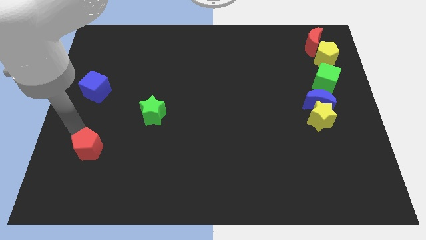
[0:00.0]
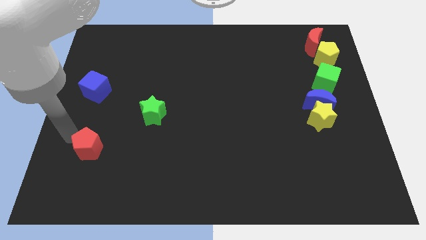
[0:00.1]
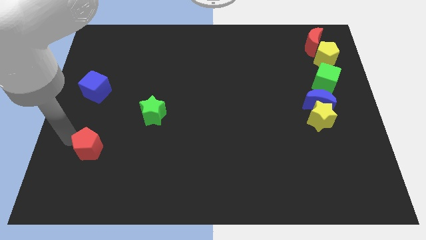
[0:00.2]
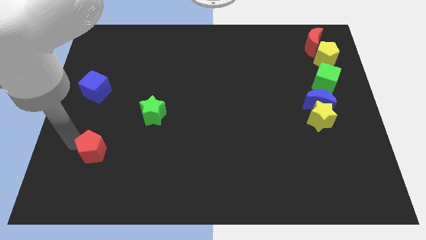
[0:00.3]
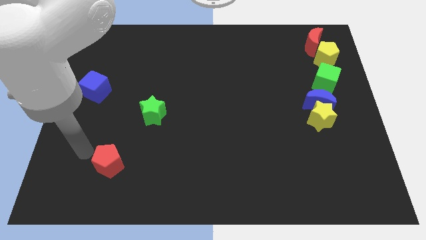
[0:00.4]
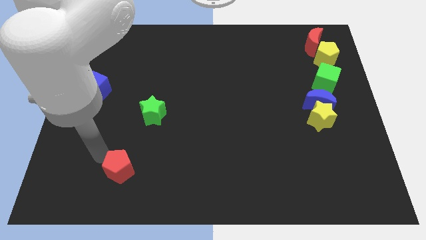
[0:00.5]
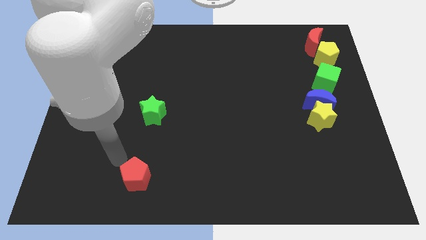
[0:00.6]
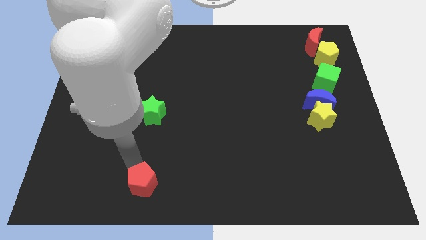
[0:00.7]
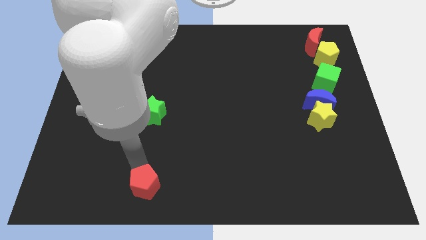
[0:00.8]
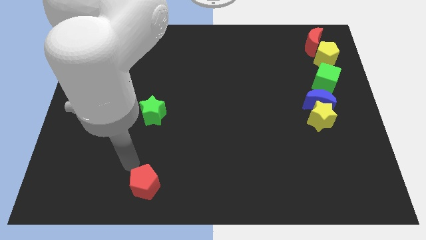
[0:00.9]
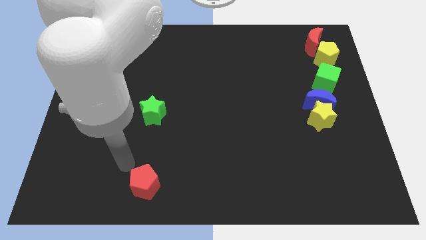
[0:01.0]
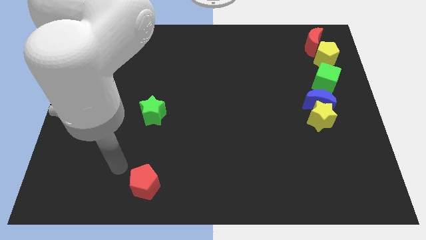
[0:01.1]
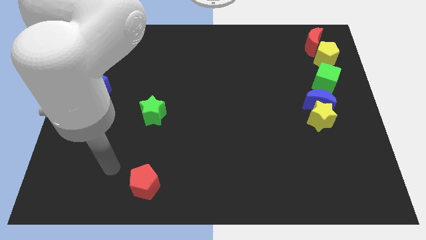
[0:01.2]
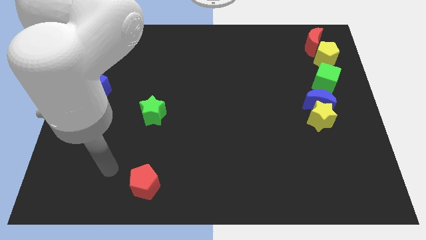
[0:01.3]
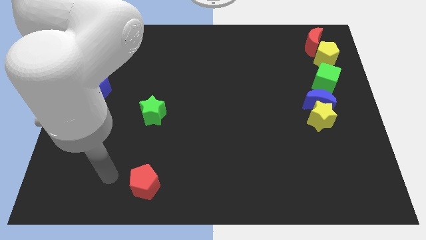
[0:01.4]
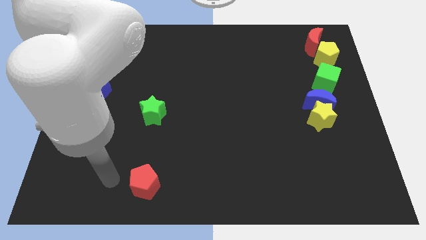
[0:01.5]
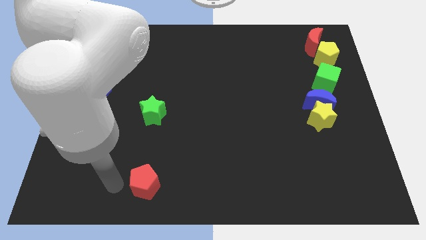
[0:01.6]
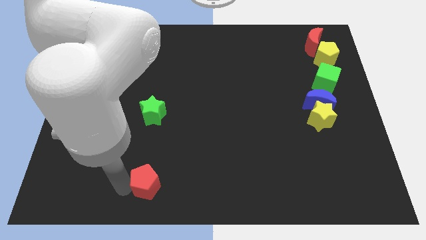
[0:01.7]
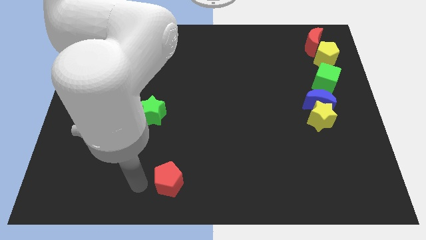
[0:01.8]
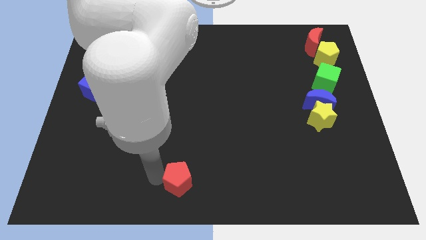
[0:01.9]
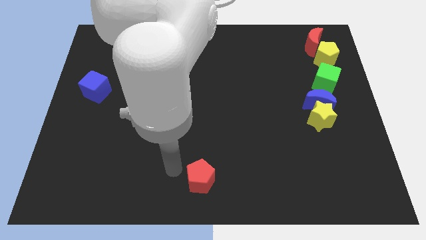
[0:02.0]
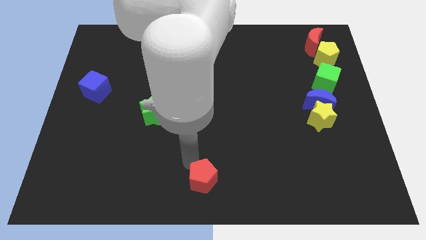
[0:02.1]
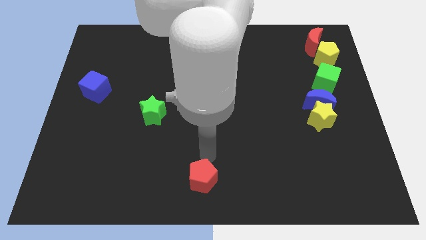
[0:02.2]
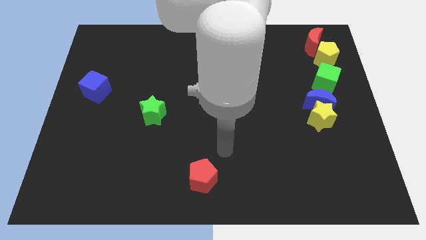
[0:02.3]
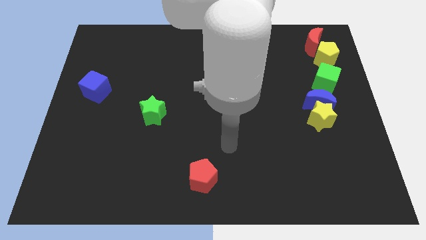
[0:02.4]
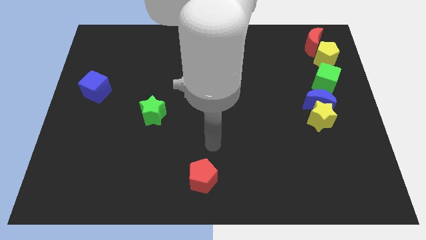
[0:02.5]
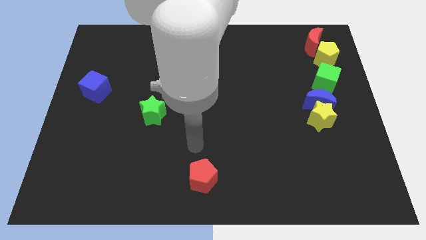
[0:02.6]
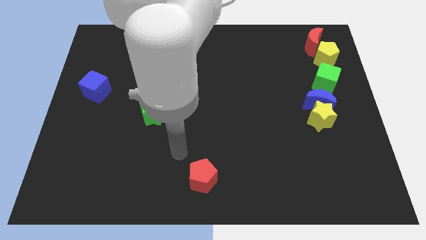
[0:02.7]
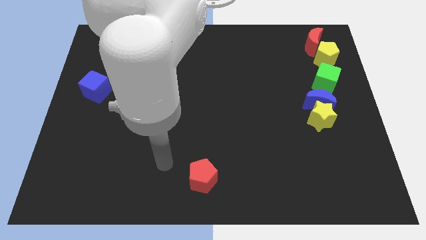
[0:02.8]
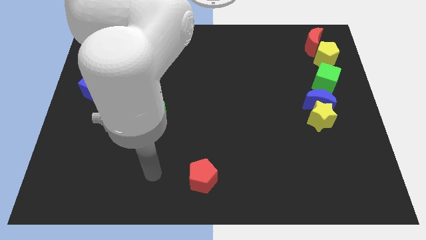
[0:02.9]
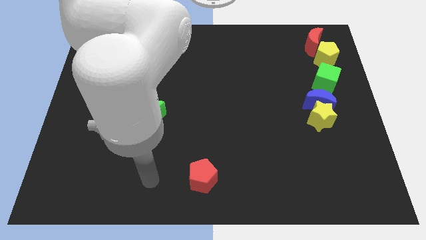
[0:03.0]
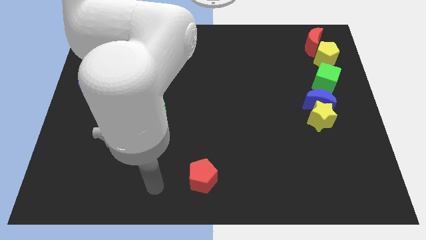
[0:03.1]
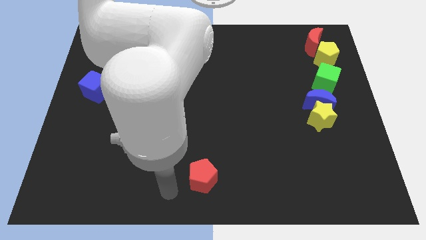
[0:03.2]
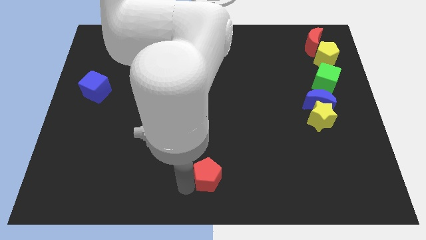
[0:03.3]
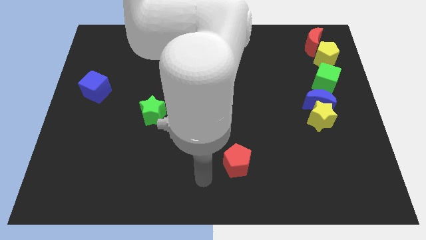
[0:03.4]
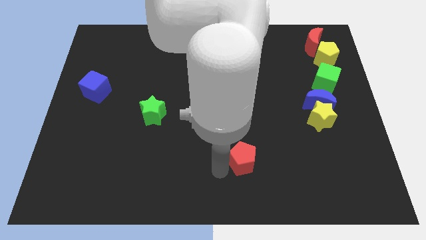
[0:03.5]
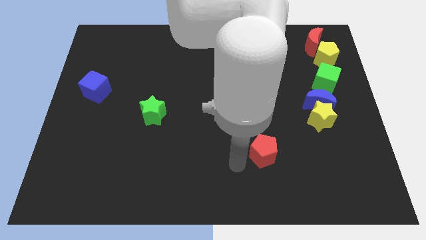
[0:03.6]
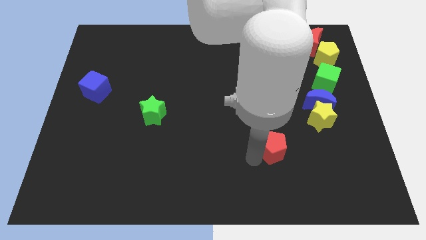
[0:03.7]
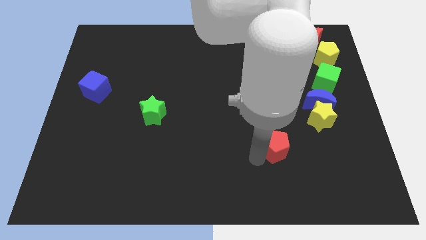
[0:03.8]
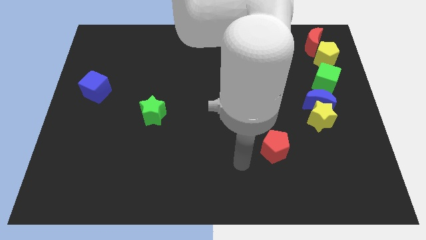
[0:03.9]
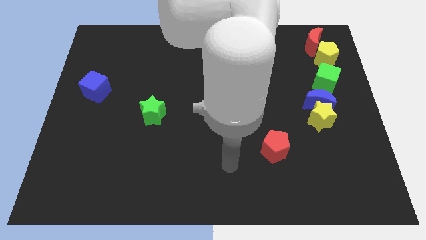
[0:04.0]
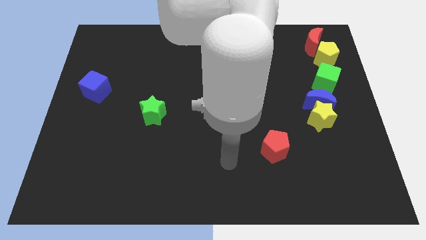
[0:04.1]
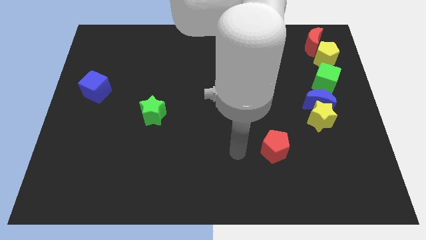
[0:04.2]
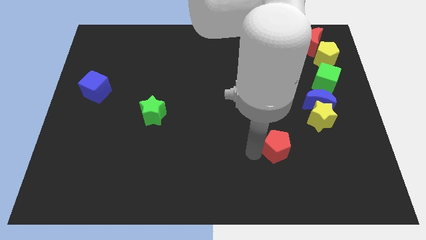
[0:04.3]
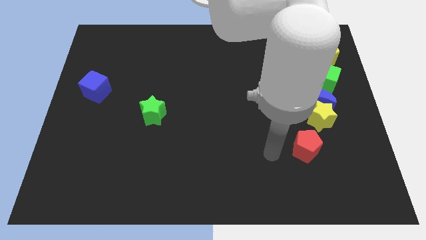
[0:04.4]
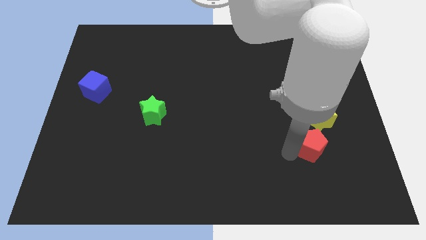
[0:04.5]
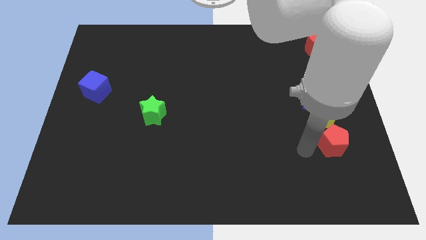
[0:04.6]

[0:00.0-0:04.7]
place the red pentagon below the yellow star

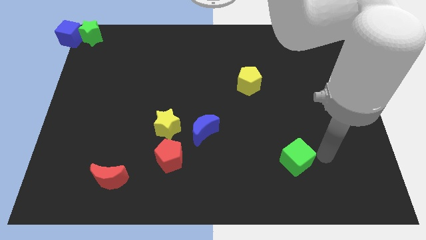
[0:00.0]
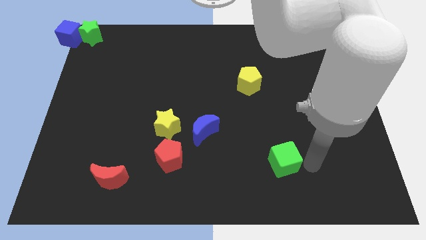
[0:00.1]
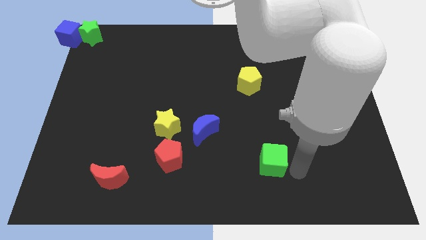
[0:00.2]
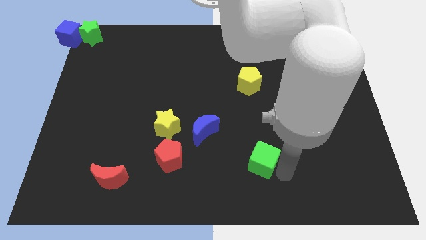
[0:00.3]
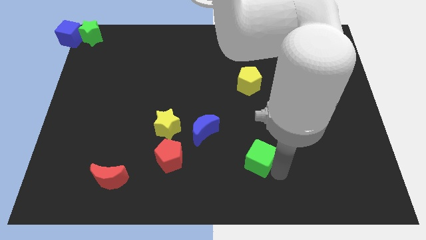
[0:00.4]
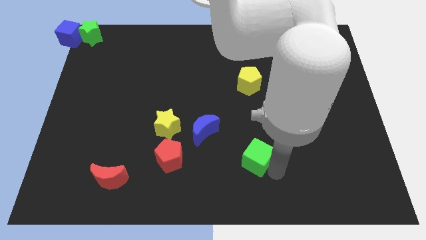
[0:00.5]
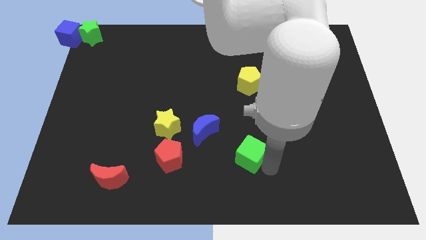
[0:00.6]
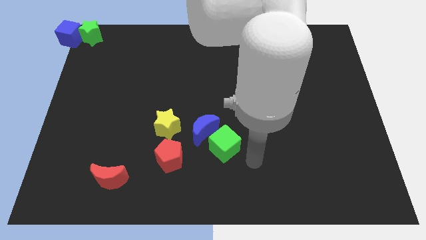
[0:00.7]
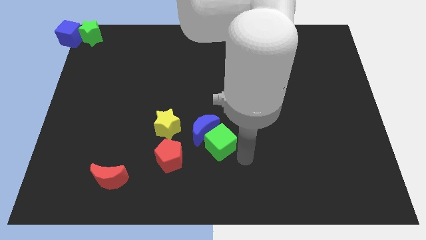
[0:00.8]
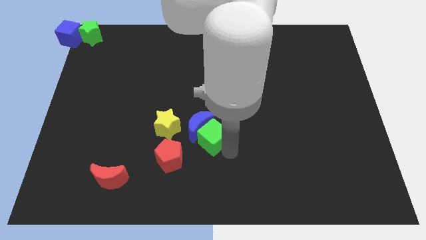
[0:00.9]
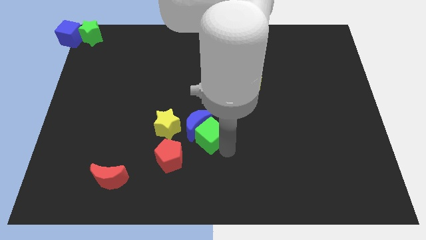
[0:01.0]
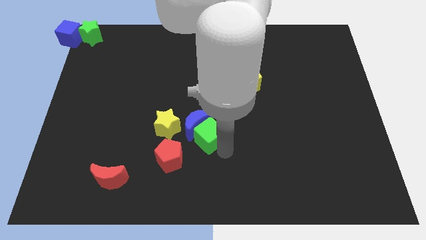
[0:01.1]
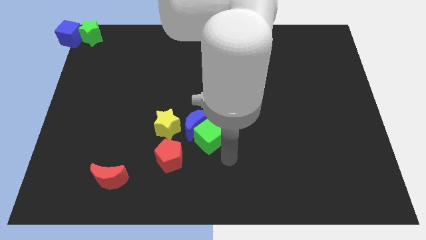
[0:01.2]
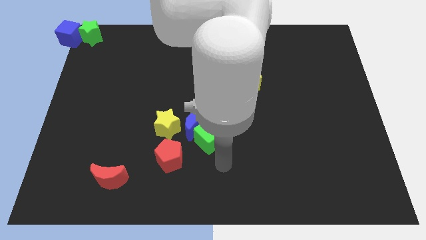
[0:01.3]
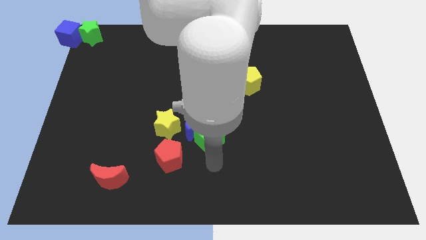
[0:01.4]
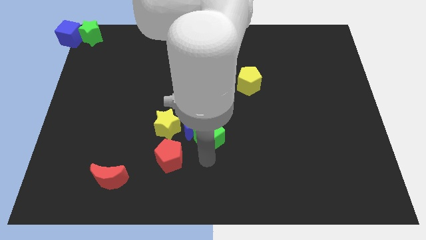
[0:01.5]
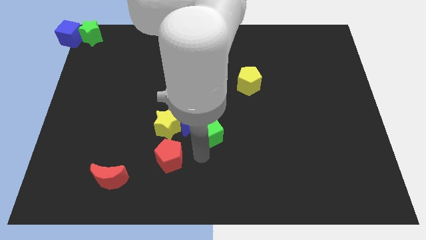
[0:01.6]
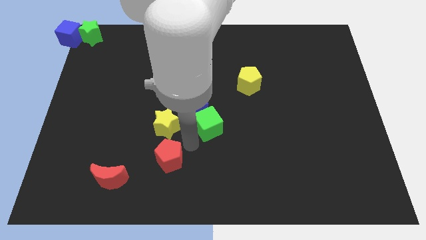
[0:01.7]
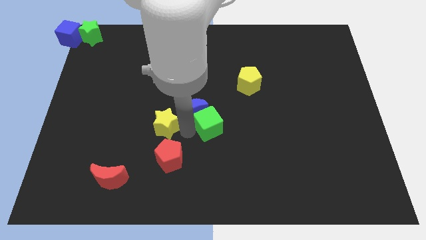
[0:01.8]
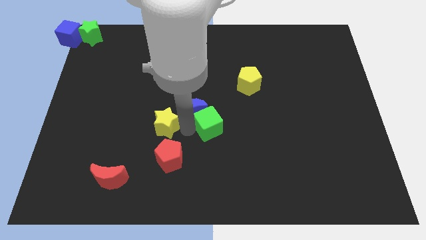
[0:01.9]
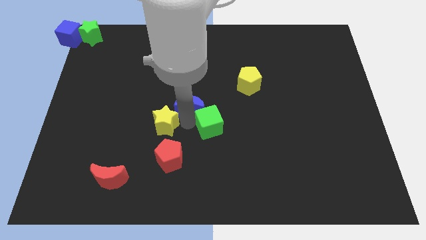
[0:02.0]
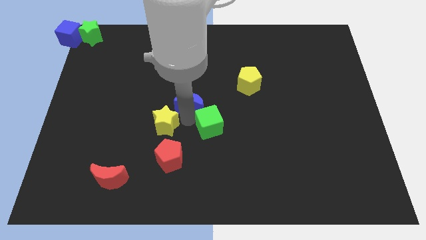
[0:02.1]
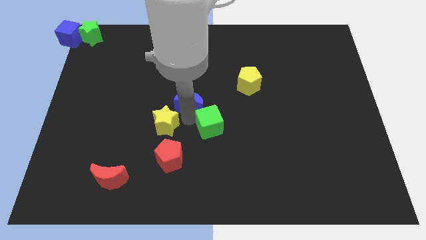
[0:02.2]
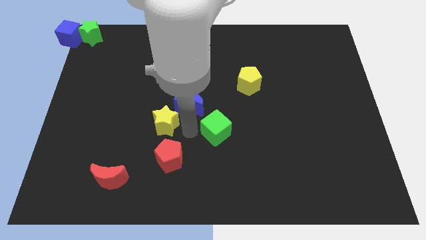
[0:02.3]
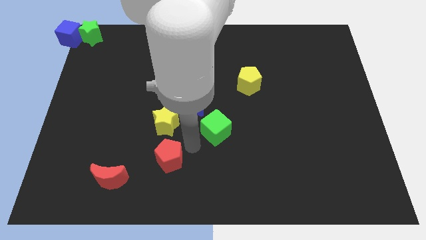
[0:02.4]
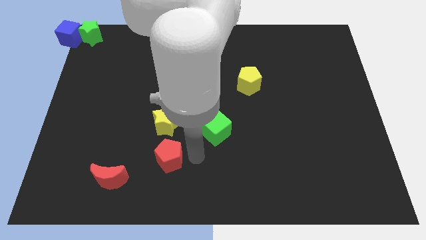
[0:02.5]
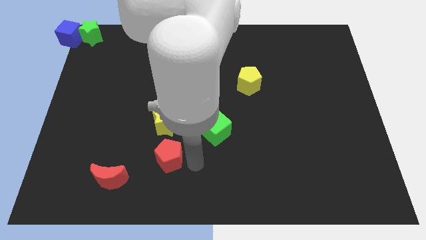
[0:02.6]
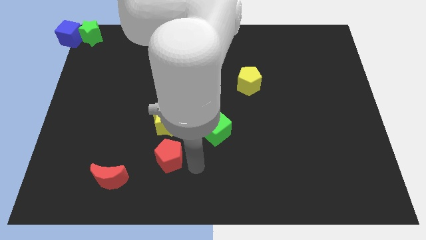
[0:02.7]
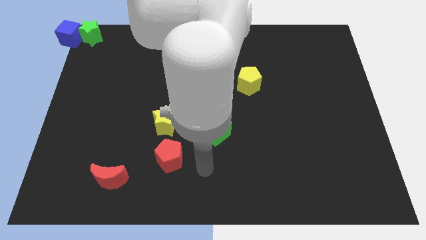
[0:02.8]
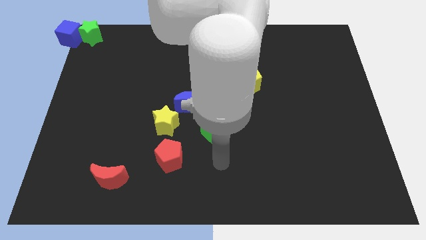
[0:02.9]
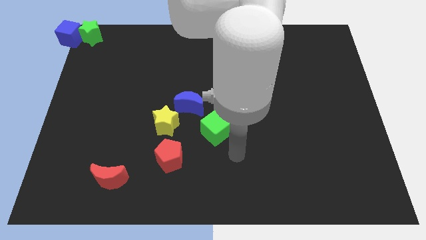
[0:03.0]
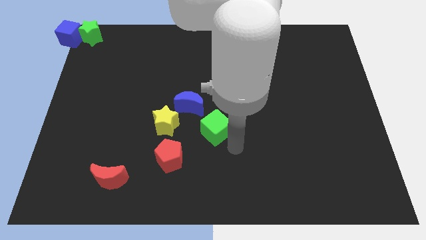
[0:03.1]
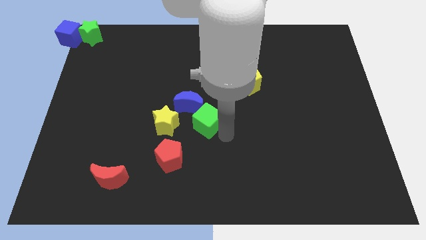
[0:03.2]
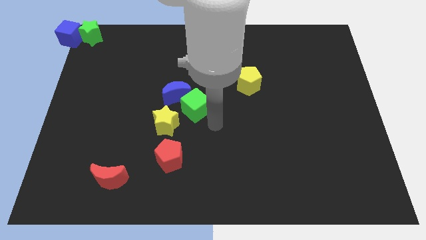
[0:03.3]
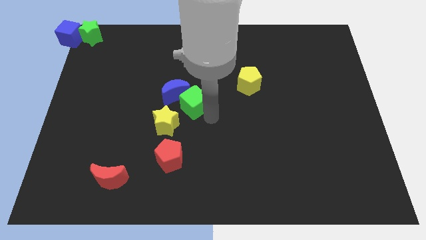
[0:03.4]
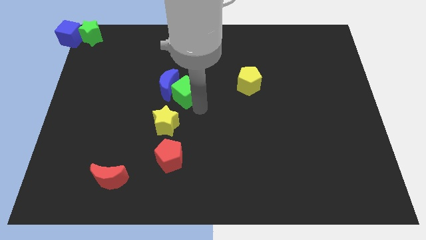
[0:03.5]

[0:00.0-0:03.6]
push the green cube towards the blue crescent into green star and blue cube

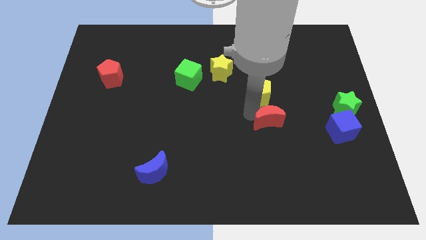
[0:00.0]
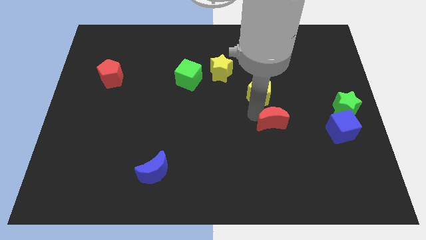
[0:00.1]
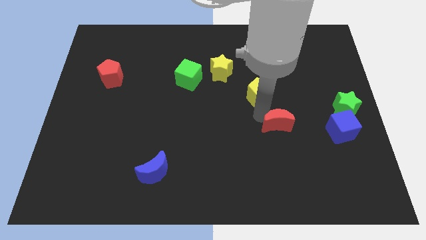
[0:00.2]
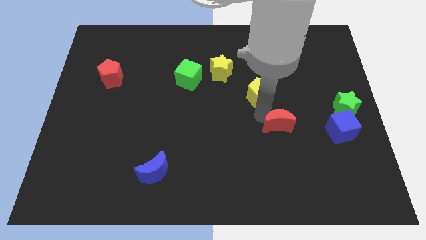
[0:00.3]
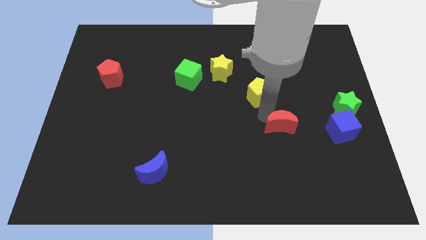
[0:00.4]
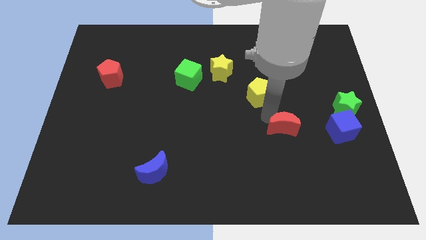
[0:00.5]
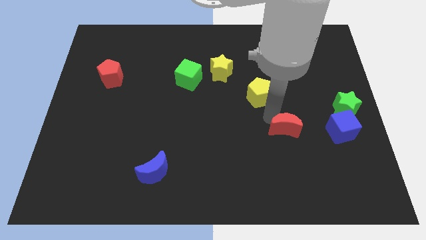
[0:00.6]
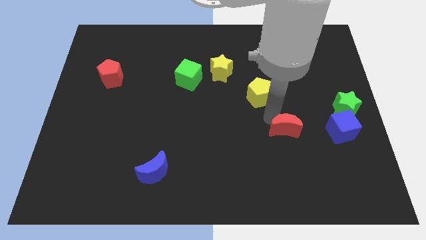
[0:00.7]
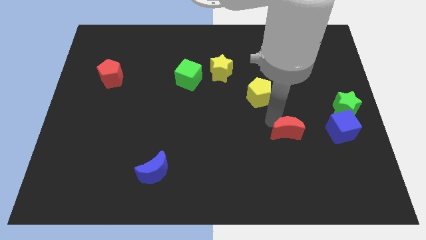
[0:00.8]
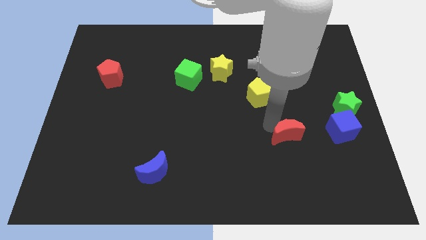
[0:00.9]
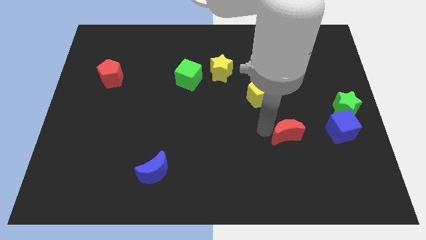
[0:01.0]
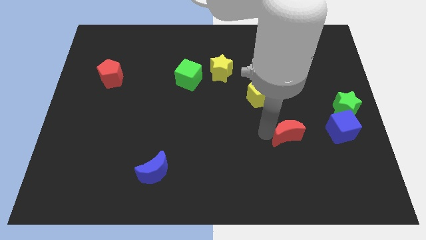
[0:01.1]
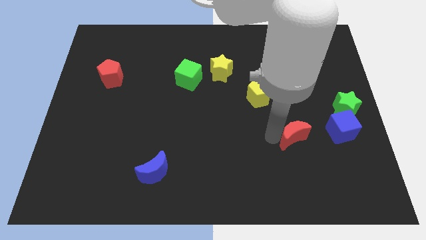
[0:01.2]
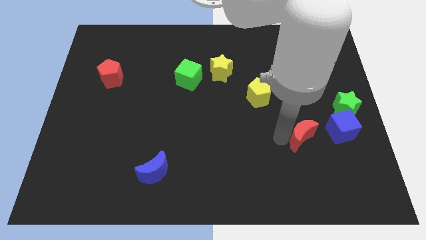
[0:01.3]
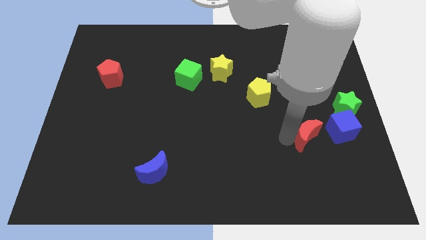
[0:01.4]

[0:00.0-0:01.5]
put the red moon left to the blue cube
